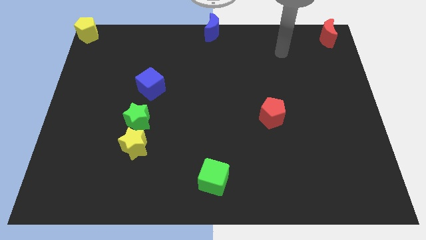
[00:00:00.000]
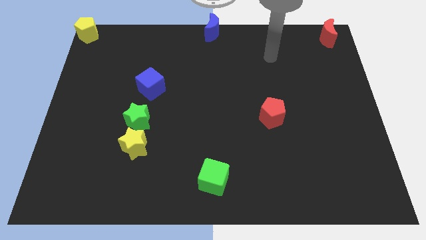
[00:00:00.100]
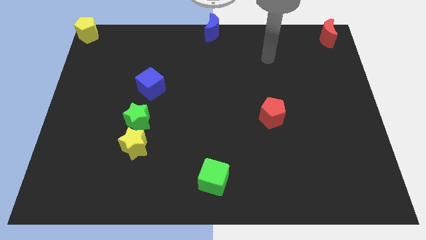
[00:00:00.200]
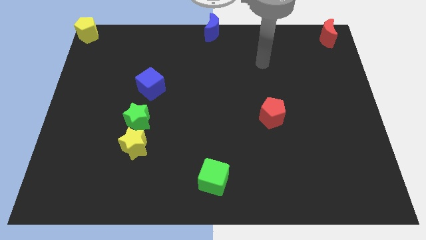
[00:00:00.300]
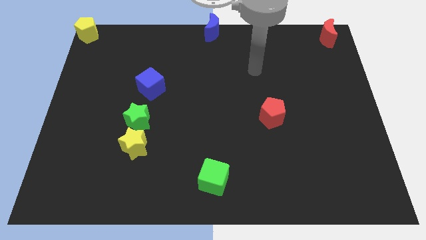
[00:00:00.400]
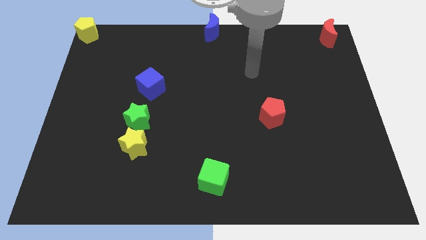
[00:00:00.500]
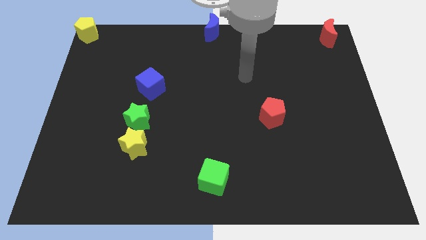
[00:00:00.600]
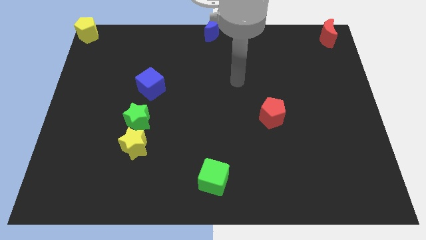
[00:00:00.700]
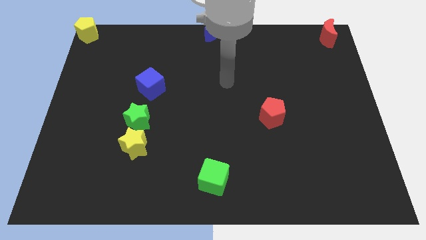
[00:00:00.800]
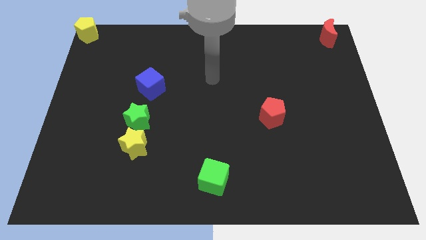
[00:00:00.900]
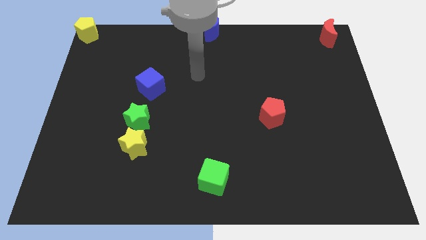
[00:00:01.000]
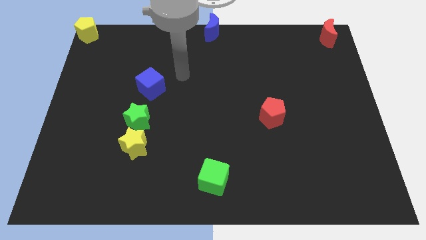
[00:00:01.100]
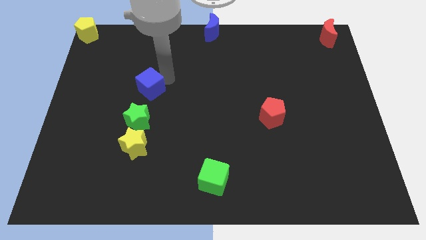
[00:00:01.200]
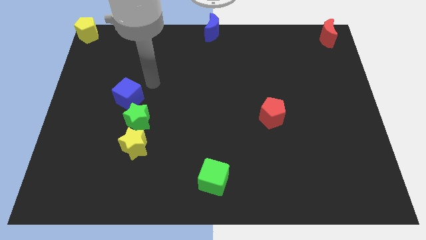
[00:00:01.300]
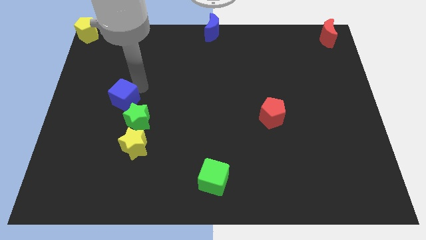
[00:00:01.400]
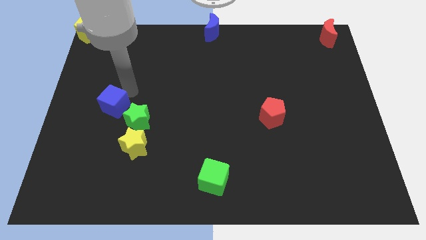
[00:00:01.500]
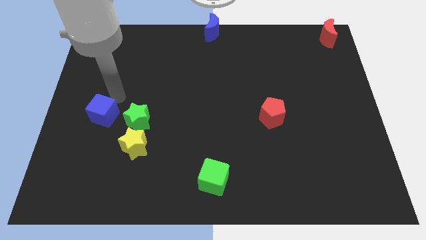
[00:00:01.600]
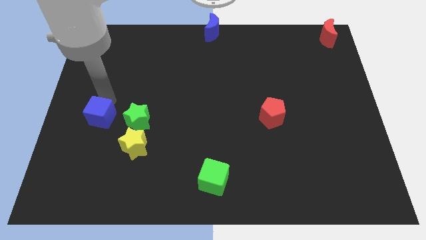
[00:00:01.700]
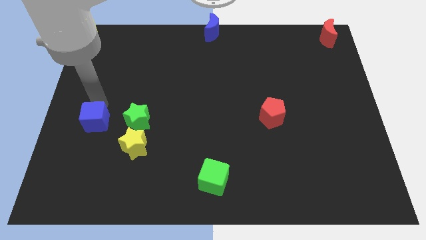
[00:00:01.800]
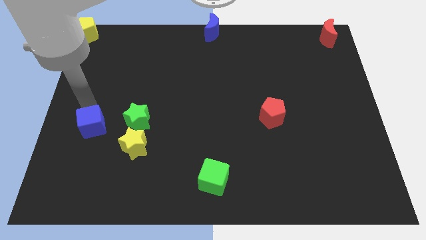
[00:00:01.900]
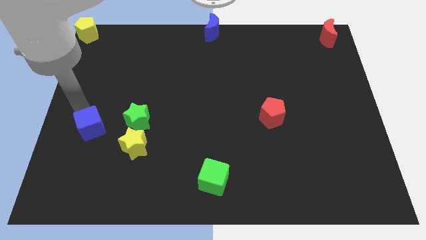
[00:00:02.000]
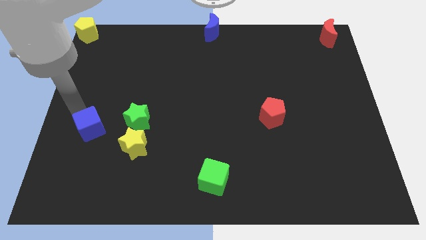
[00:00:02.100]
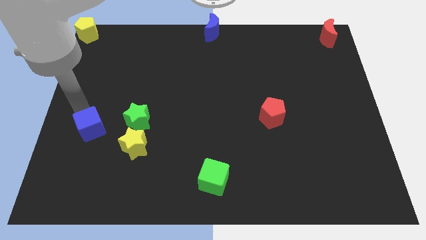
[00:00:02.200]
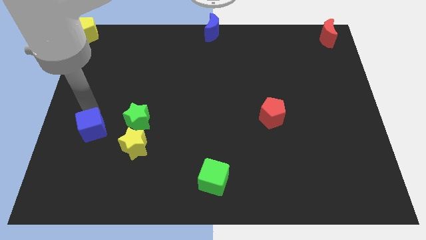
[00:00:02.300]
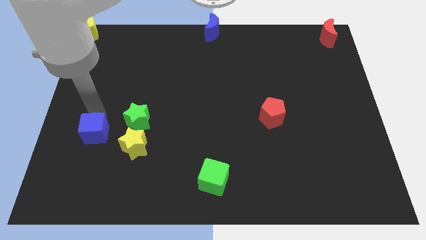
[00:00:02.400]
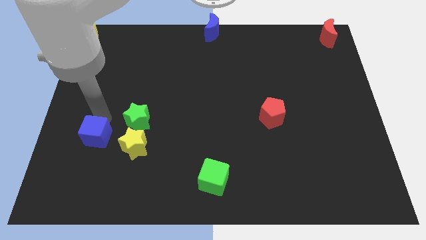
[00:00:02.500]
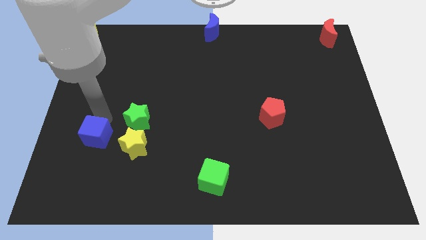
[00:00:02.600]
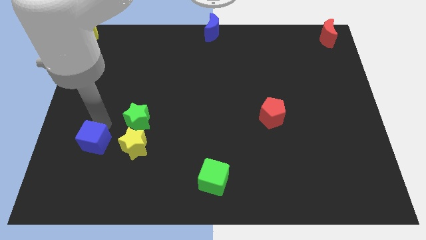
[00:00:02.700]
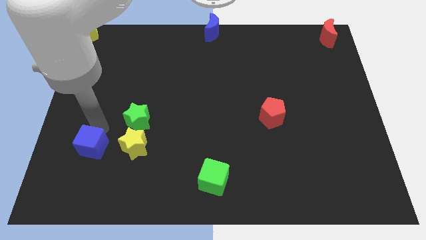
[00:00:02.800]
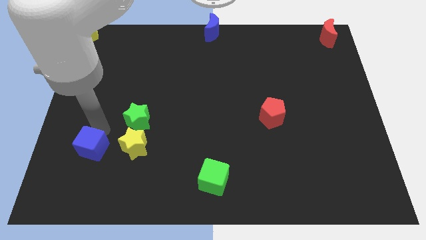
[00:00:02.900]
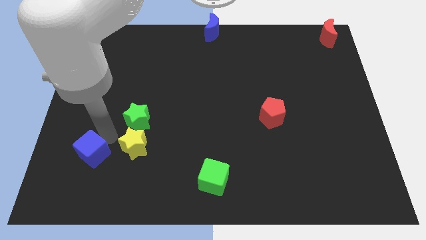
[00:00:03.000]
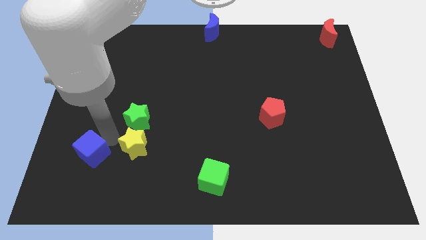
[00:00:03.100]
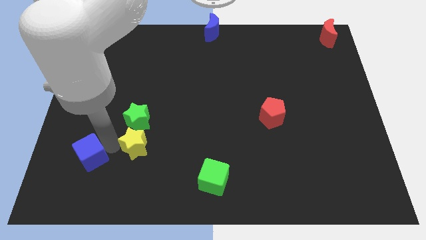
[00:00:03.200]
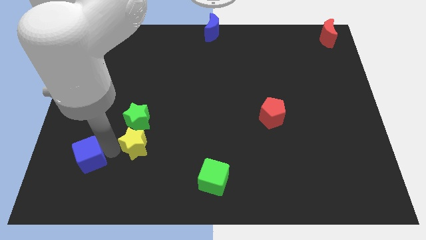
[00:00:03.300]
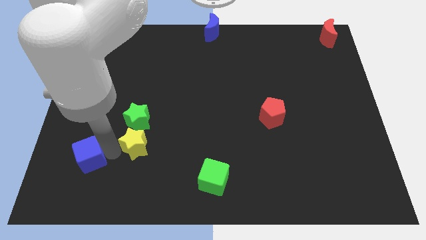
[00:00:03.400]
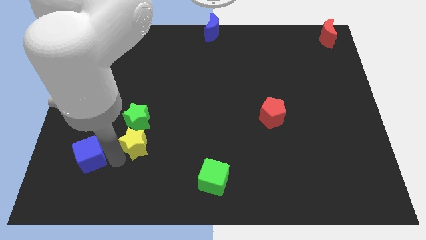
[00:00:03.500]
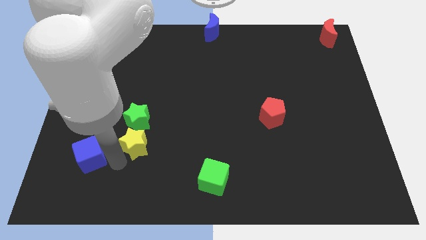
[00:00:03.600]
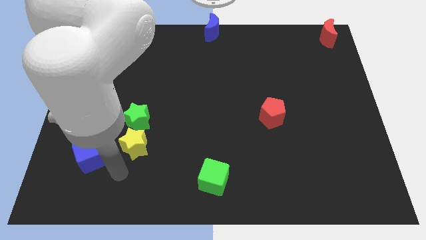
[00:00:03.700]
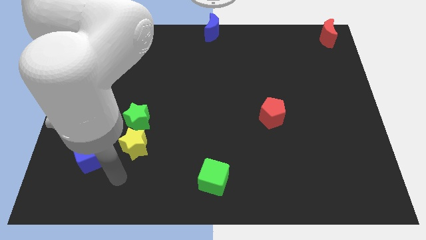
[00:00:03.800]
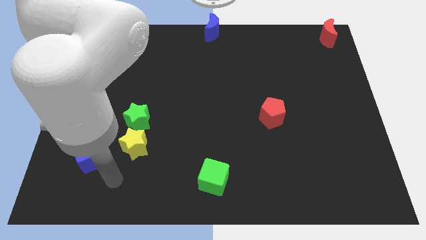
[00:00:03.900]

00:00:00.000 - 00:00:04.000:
move the blue cube to the left of the yellow star

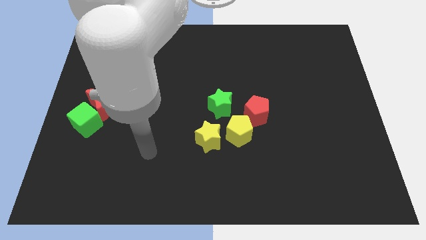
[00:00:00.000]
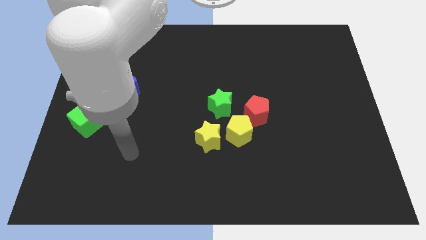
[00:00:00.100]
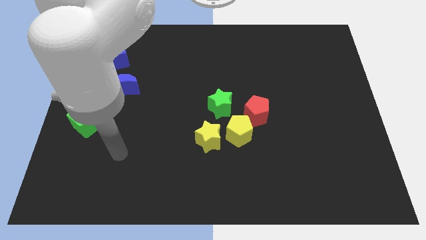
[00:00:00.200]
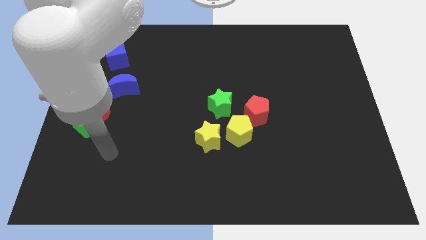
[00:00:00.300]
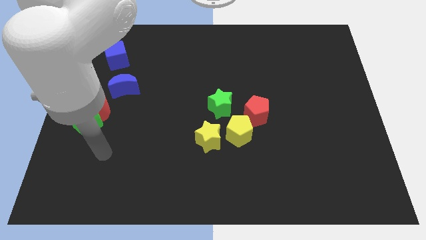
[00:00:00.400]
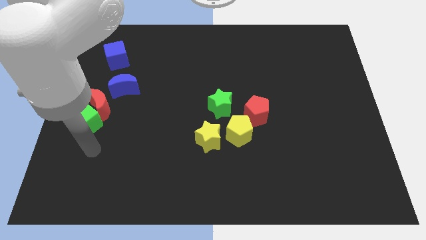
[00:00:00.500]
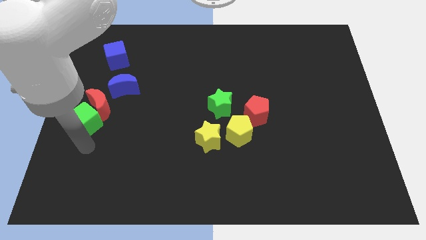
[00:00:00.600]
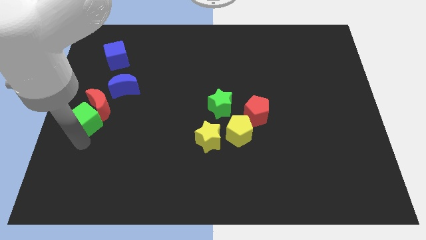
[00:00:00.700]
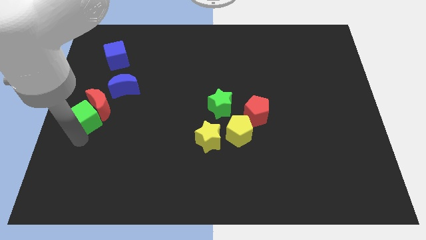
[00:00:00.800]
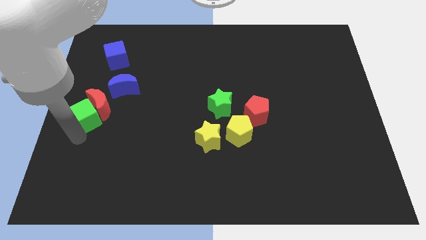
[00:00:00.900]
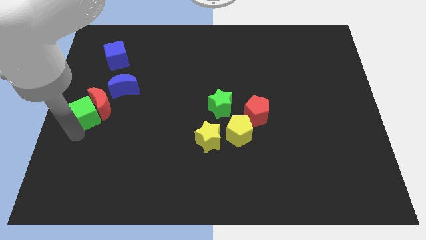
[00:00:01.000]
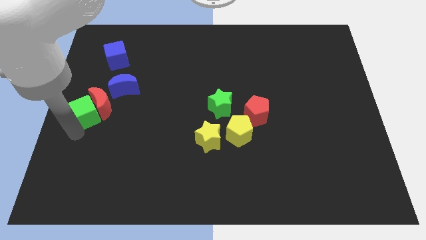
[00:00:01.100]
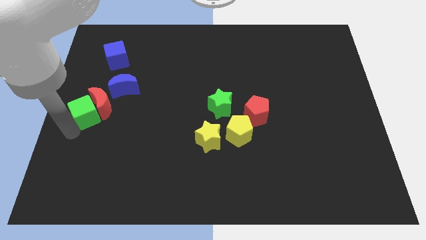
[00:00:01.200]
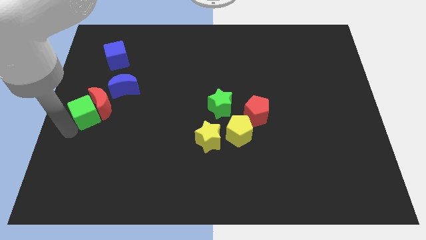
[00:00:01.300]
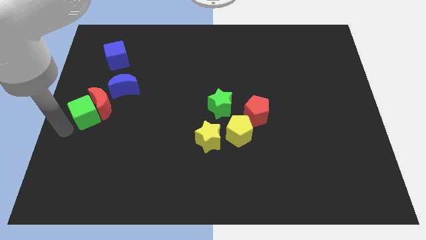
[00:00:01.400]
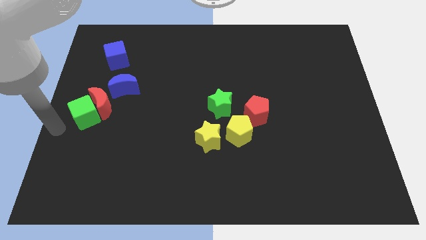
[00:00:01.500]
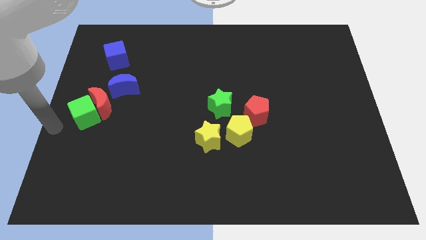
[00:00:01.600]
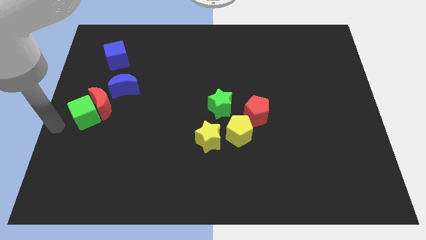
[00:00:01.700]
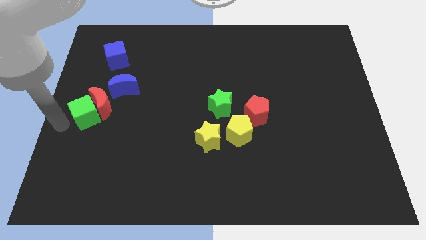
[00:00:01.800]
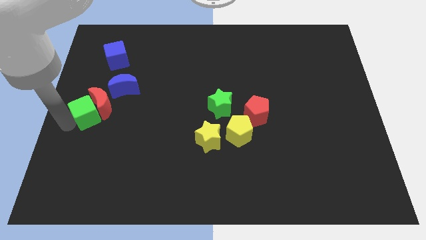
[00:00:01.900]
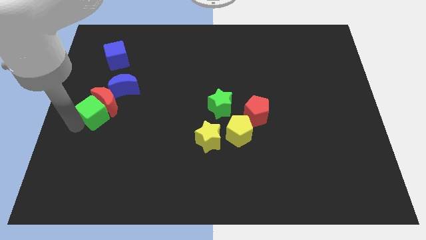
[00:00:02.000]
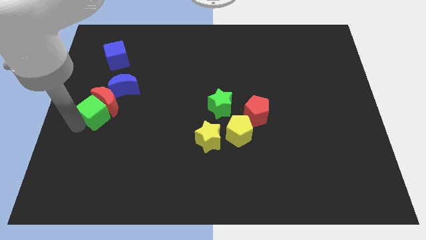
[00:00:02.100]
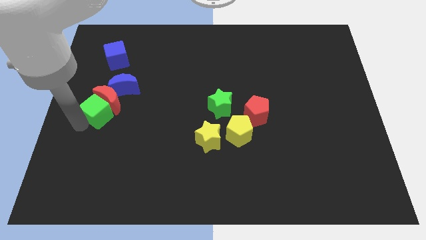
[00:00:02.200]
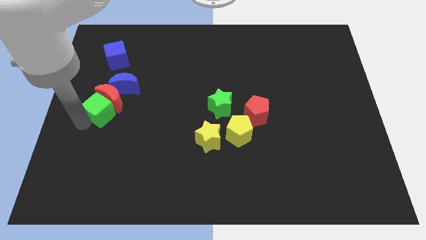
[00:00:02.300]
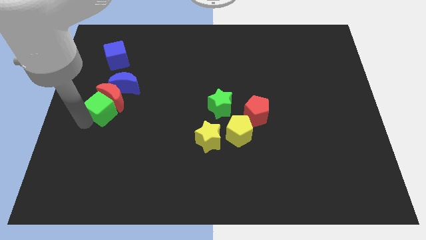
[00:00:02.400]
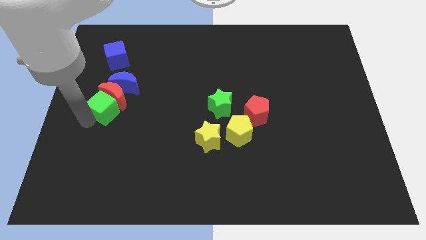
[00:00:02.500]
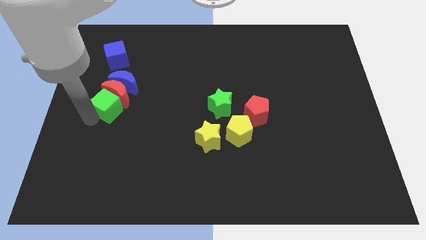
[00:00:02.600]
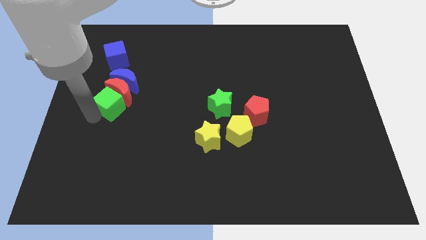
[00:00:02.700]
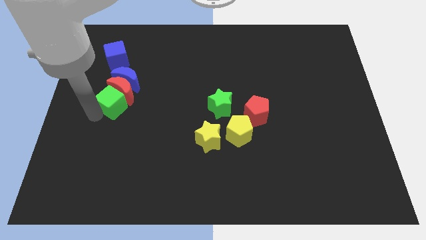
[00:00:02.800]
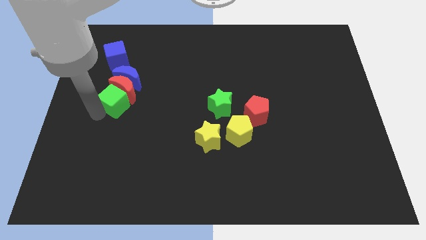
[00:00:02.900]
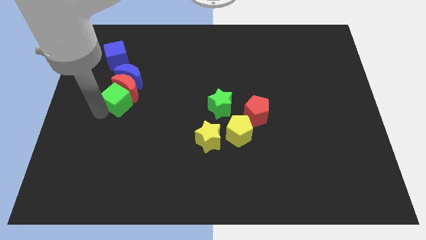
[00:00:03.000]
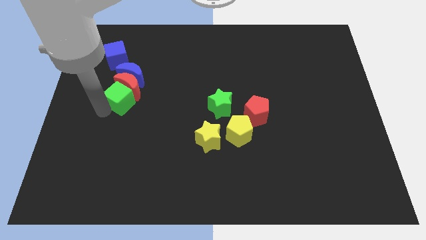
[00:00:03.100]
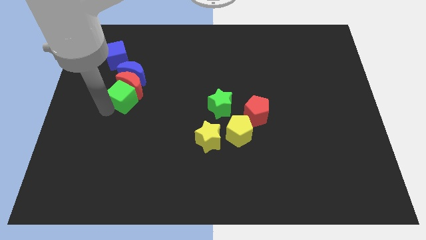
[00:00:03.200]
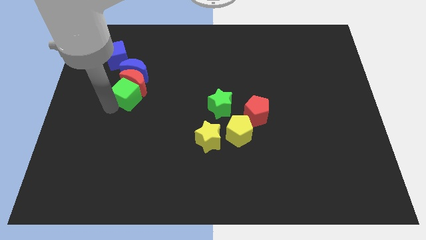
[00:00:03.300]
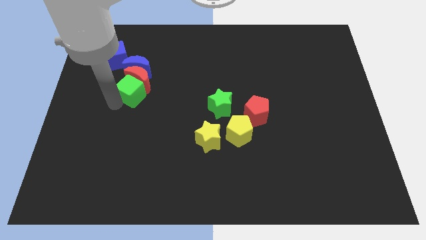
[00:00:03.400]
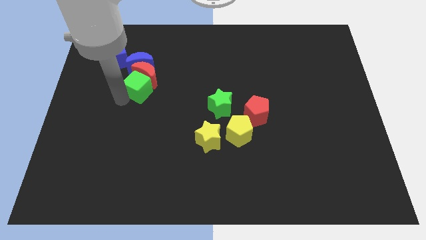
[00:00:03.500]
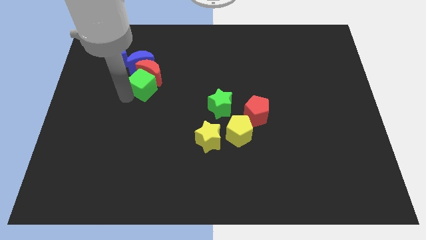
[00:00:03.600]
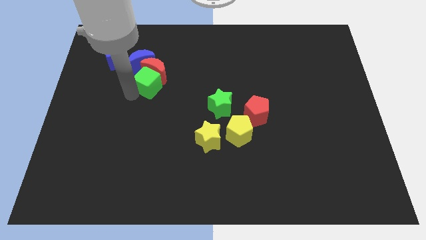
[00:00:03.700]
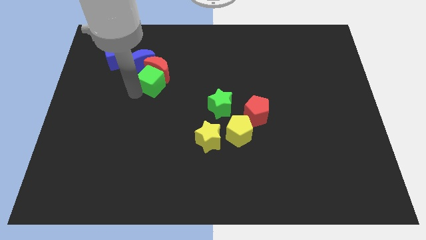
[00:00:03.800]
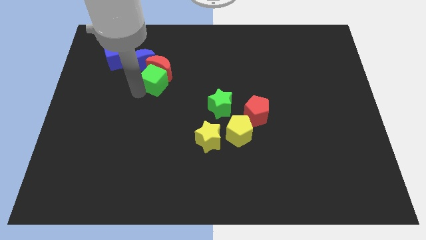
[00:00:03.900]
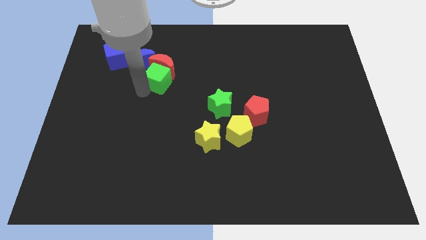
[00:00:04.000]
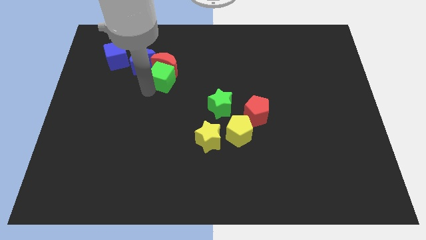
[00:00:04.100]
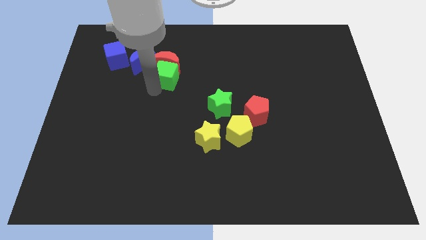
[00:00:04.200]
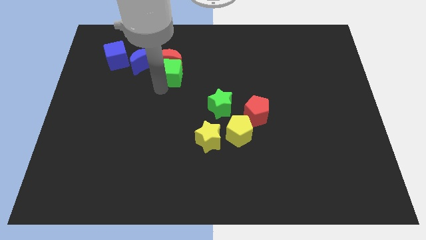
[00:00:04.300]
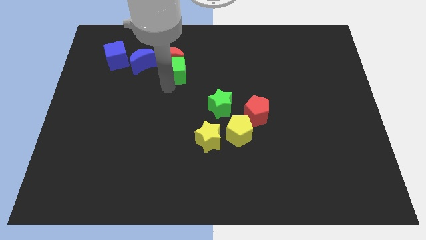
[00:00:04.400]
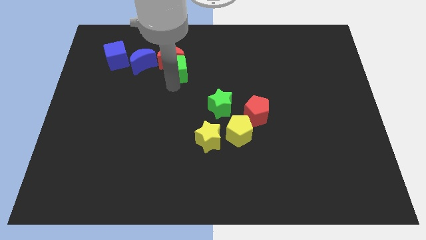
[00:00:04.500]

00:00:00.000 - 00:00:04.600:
push the green cube into the red moon

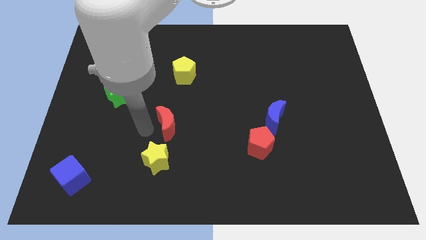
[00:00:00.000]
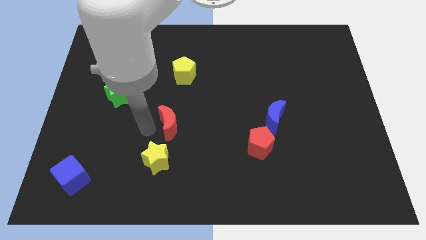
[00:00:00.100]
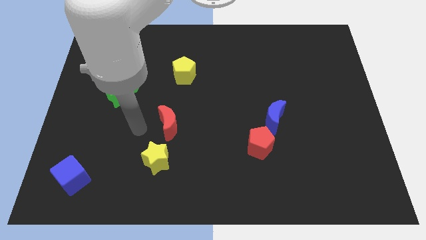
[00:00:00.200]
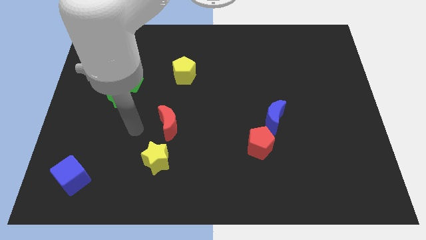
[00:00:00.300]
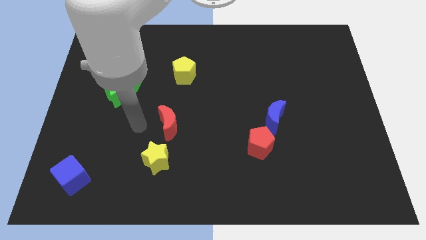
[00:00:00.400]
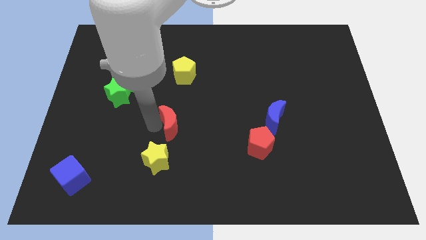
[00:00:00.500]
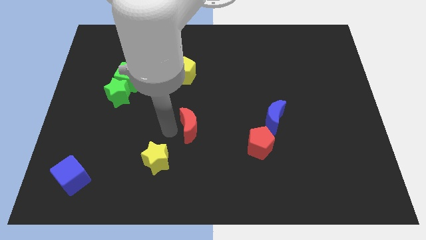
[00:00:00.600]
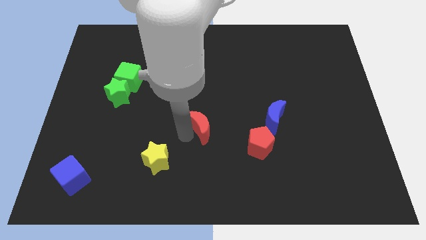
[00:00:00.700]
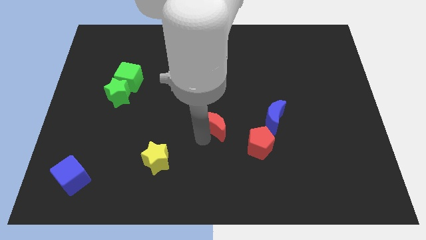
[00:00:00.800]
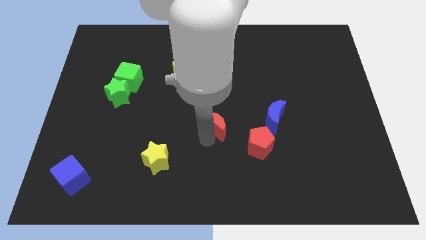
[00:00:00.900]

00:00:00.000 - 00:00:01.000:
place the red crescent at the center of the board
